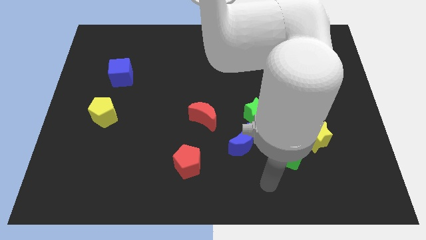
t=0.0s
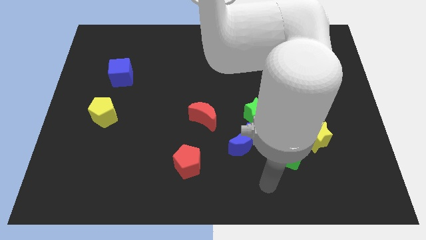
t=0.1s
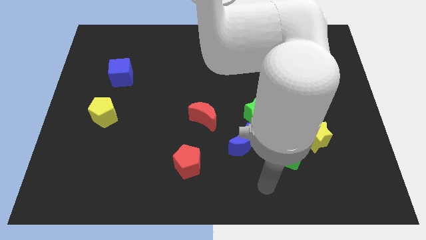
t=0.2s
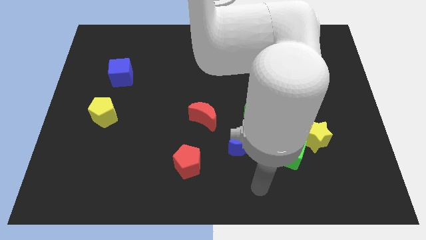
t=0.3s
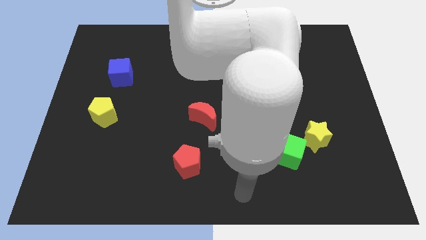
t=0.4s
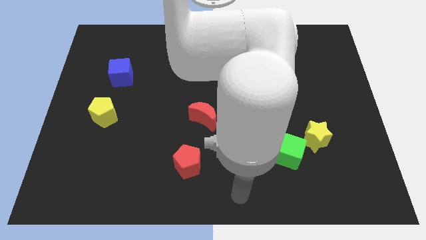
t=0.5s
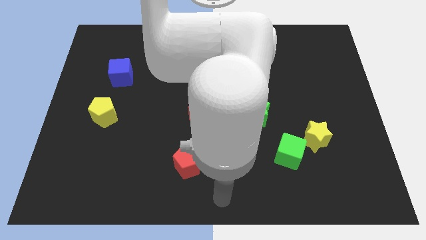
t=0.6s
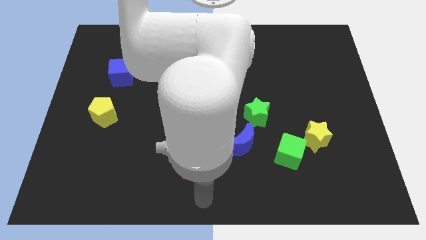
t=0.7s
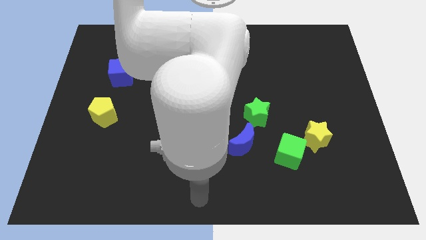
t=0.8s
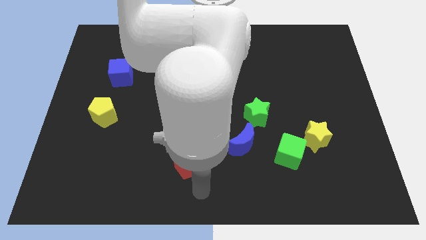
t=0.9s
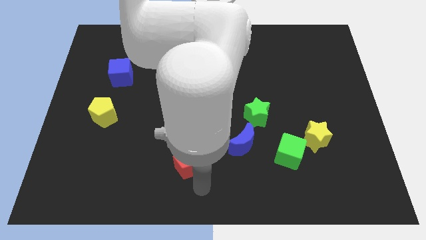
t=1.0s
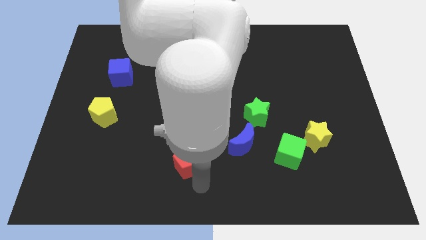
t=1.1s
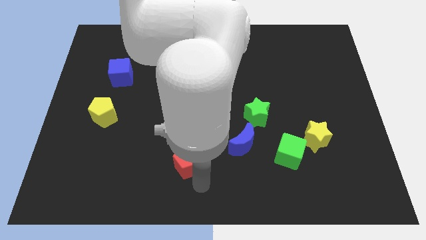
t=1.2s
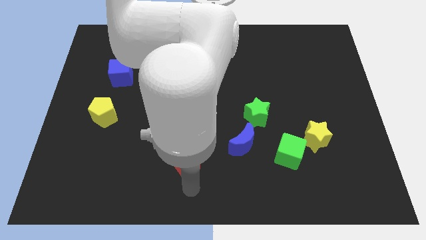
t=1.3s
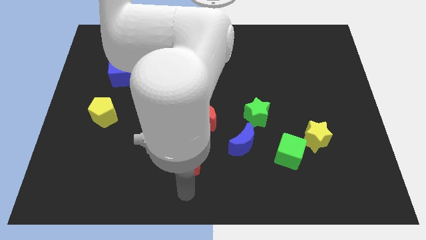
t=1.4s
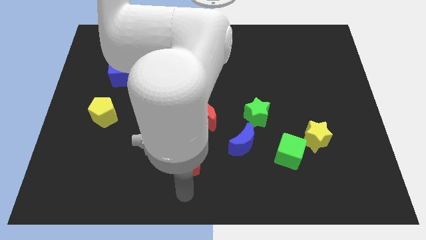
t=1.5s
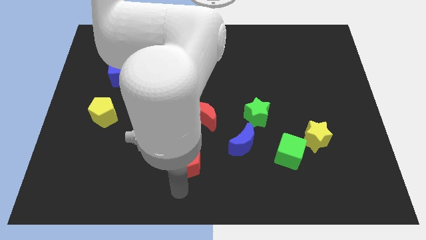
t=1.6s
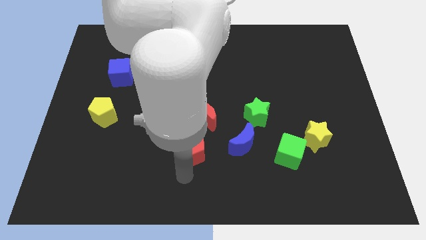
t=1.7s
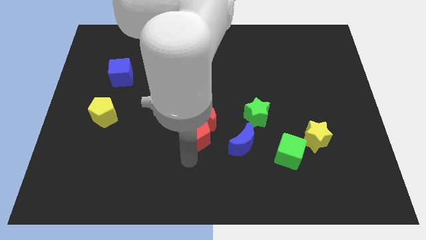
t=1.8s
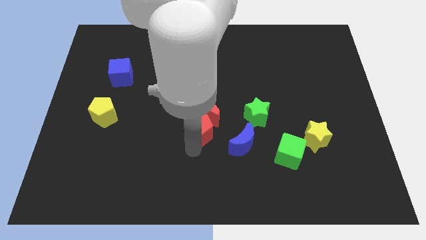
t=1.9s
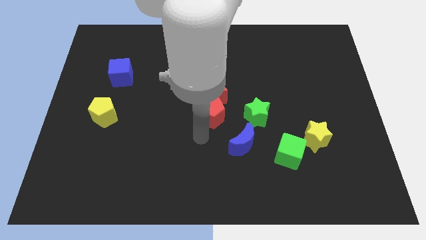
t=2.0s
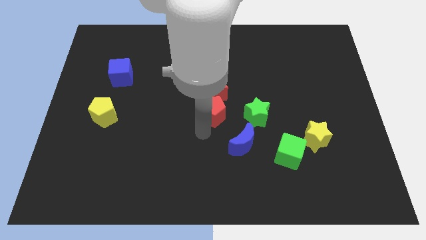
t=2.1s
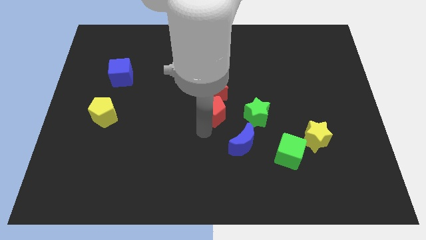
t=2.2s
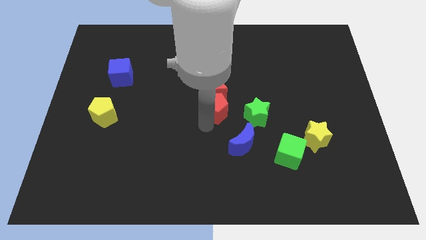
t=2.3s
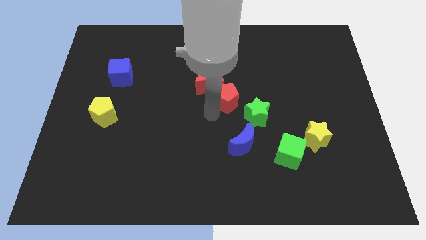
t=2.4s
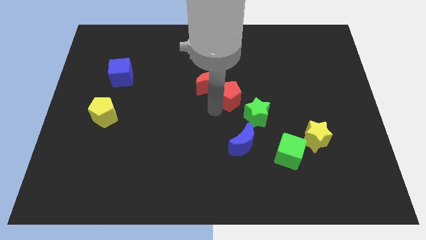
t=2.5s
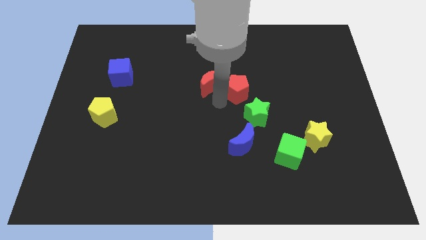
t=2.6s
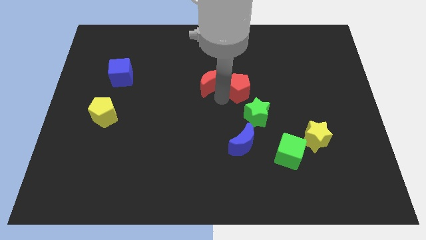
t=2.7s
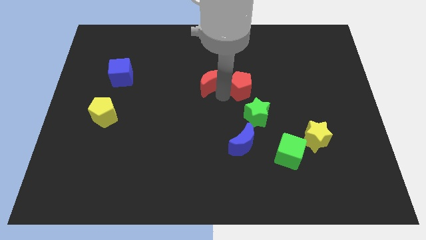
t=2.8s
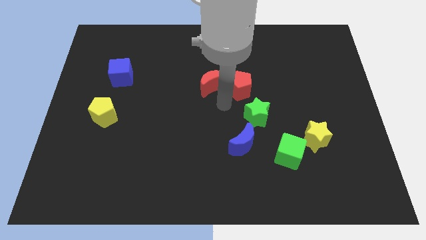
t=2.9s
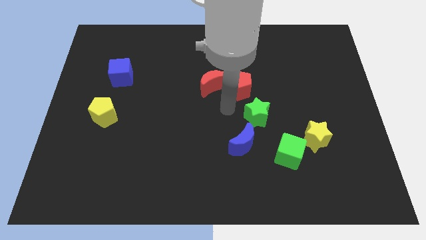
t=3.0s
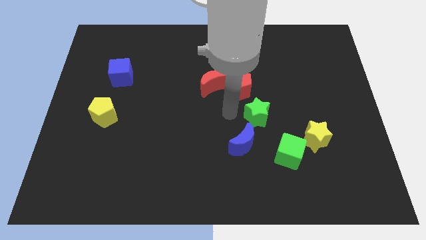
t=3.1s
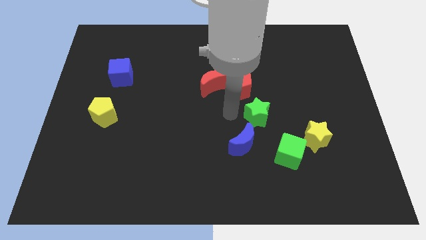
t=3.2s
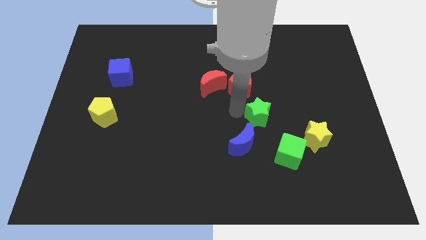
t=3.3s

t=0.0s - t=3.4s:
push the red pentagon towards the center of the board

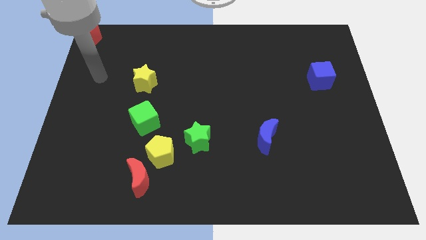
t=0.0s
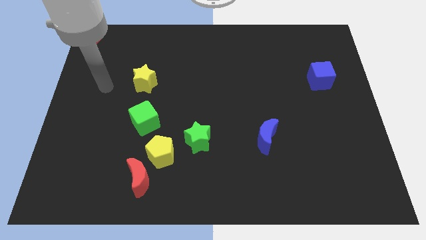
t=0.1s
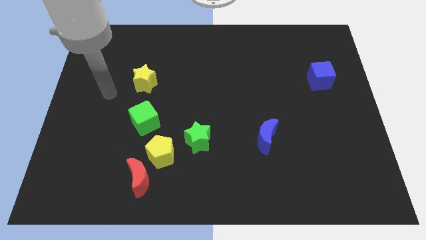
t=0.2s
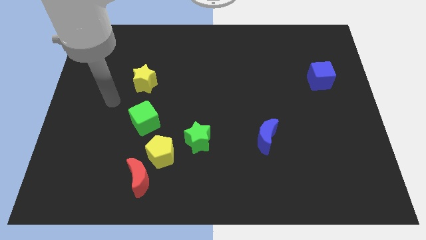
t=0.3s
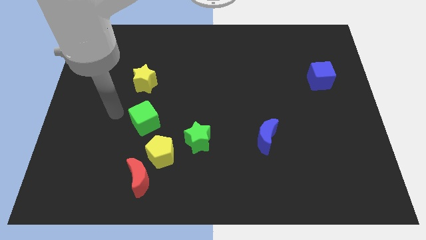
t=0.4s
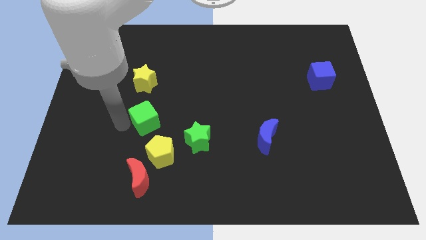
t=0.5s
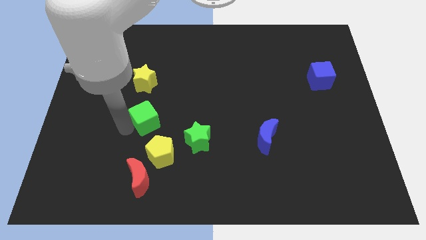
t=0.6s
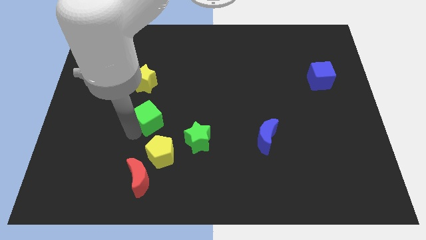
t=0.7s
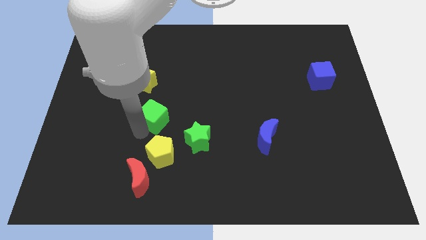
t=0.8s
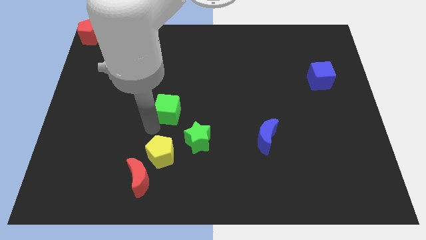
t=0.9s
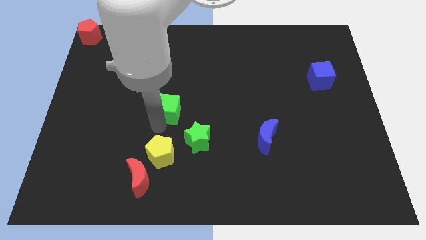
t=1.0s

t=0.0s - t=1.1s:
move green cube above yellow pentagon

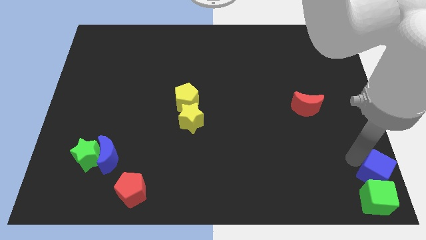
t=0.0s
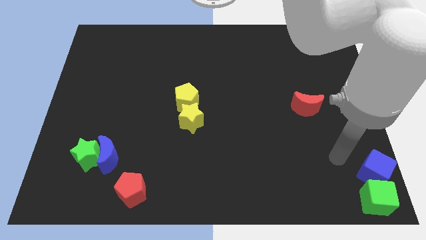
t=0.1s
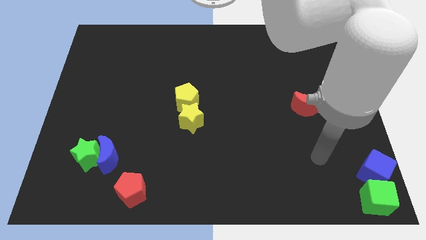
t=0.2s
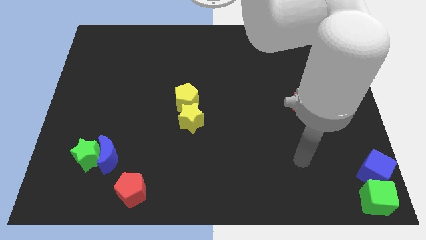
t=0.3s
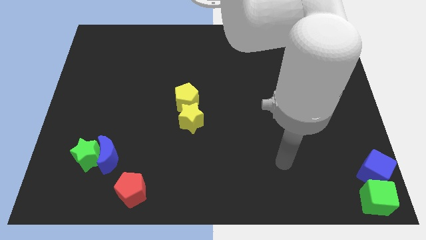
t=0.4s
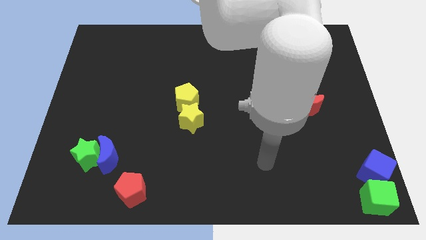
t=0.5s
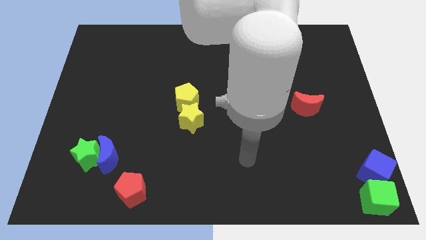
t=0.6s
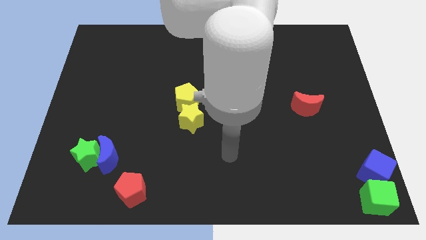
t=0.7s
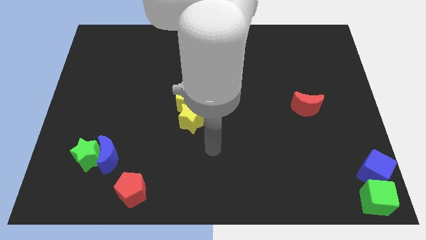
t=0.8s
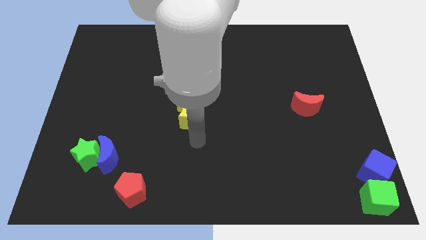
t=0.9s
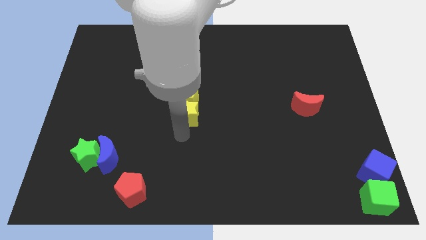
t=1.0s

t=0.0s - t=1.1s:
move the arm away from the blue cube

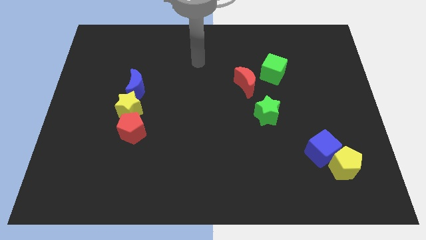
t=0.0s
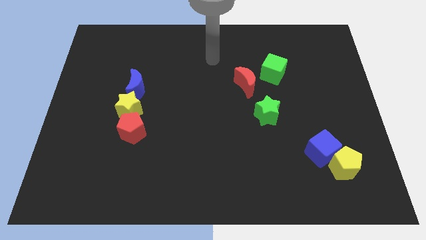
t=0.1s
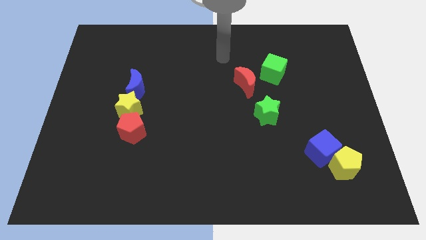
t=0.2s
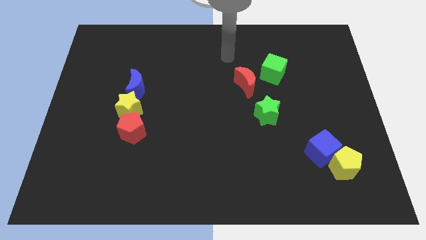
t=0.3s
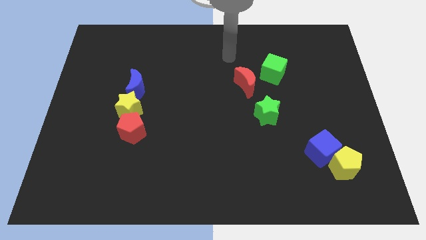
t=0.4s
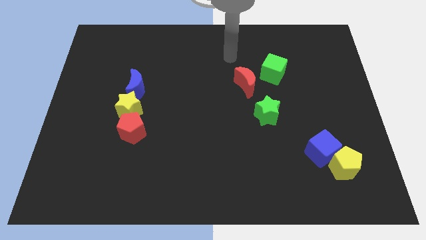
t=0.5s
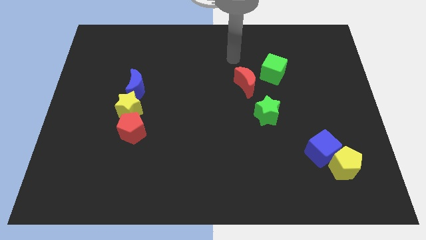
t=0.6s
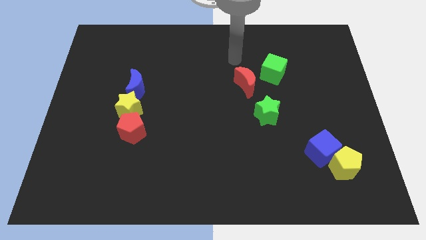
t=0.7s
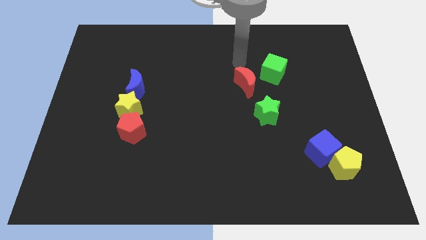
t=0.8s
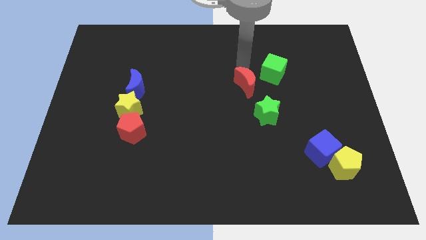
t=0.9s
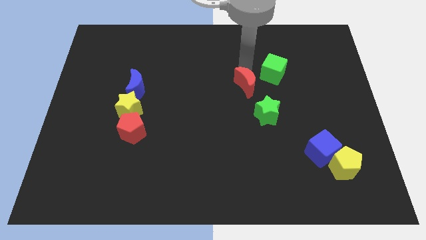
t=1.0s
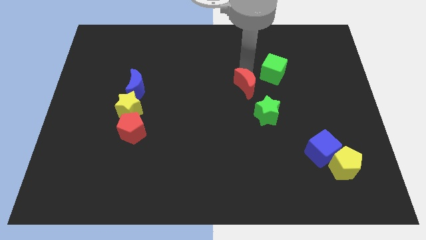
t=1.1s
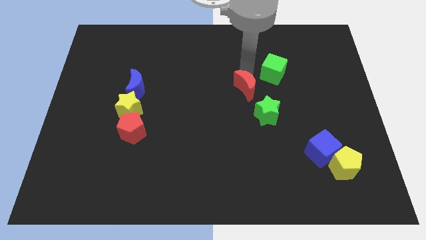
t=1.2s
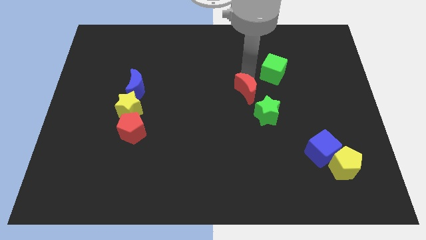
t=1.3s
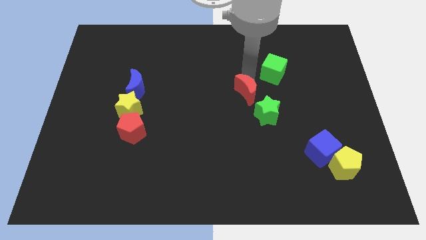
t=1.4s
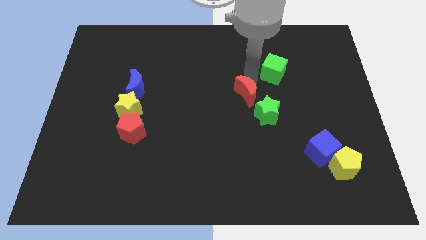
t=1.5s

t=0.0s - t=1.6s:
move the red crescent slightly to the bottom

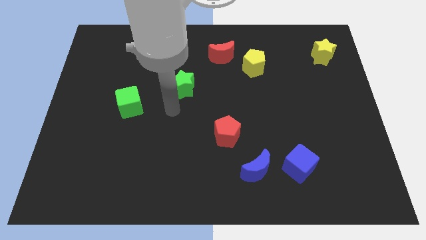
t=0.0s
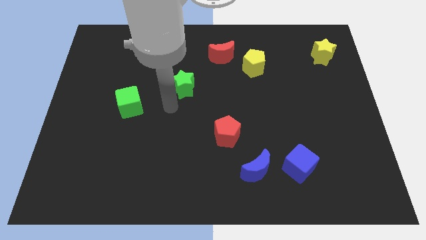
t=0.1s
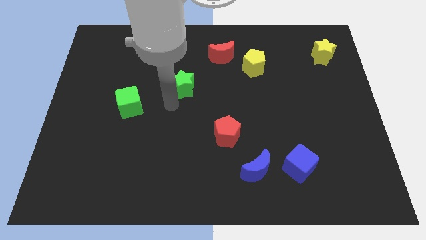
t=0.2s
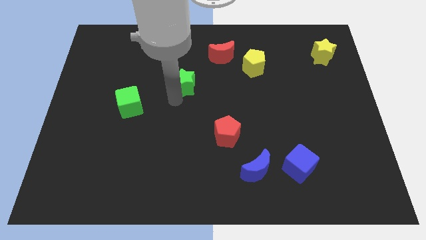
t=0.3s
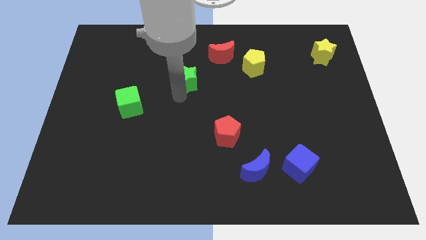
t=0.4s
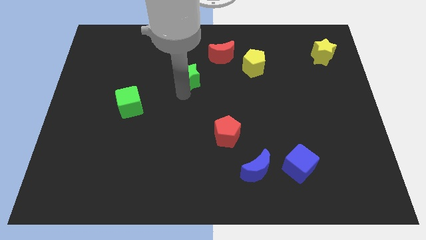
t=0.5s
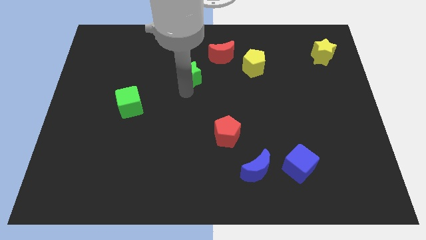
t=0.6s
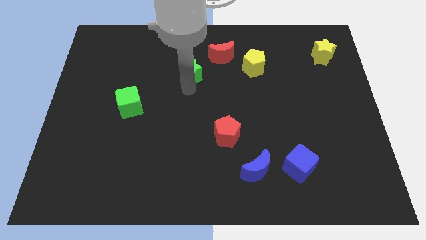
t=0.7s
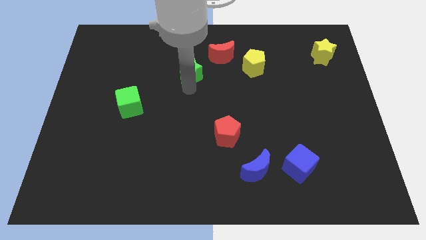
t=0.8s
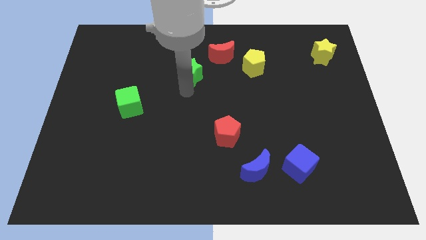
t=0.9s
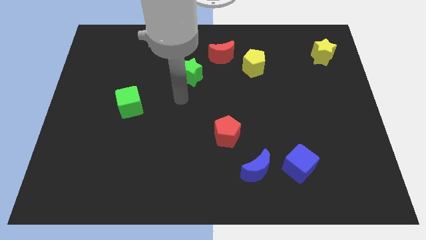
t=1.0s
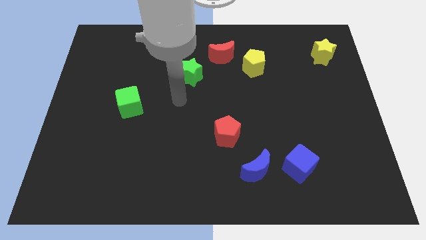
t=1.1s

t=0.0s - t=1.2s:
push the green star to the bottom left side of the red moon

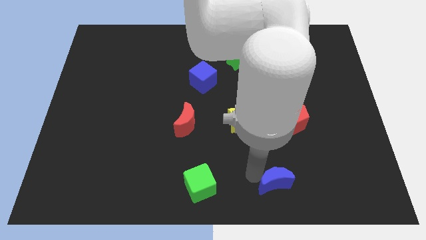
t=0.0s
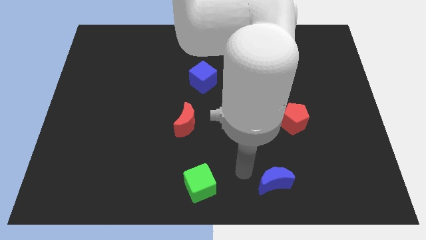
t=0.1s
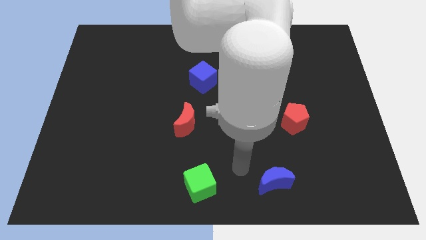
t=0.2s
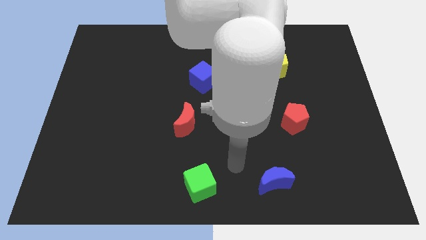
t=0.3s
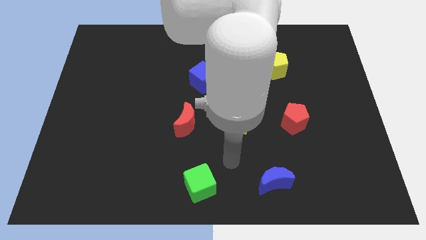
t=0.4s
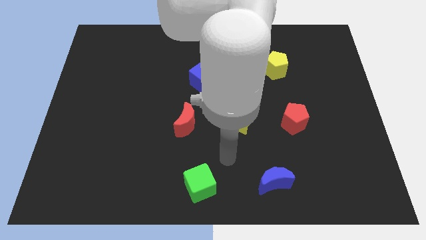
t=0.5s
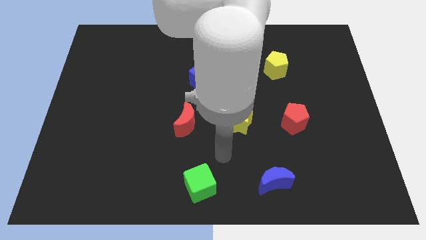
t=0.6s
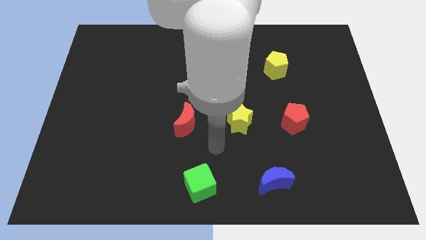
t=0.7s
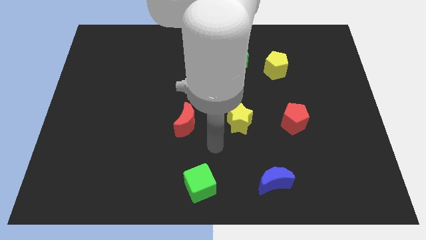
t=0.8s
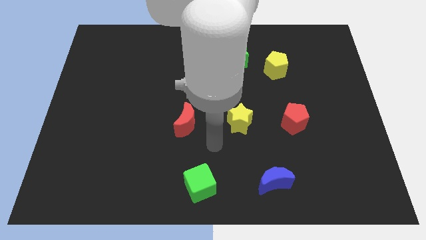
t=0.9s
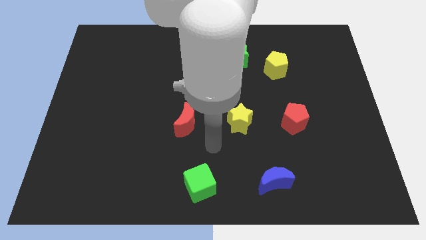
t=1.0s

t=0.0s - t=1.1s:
move your arm slightly up
